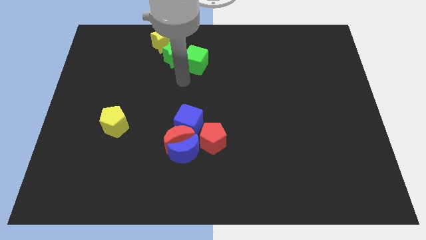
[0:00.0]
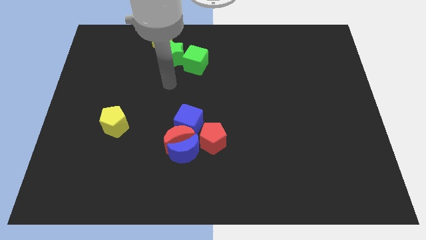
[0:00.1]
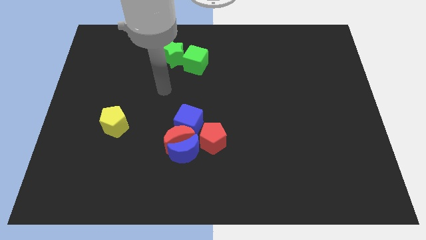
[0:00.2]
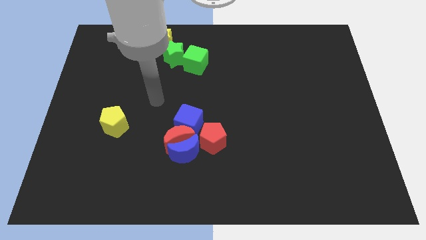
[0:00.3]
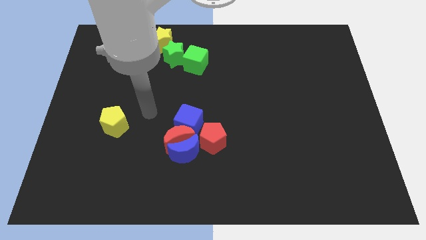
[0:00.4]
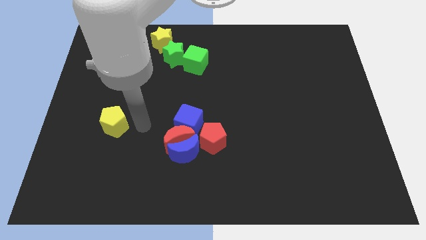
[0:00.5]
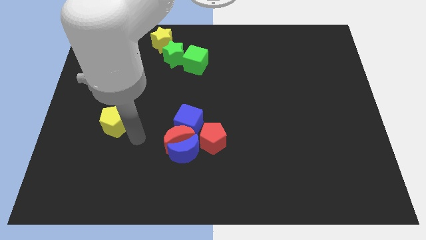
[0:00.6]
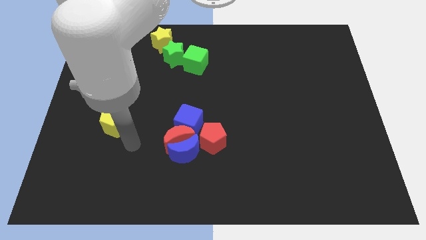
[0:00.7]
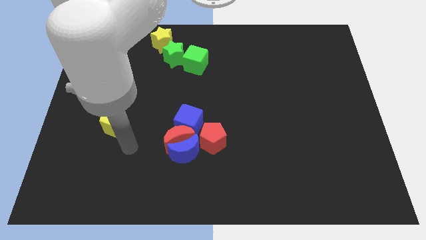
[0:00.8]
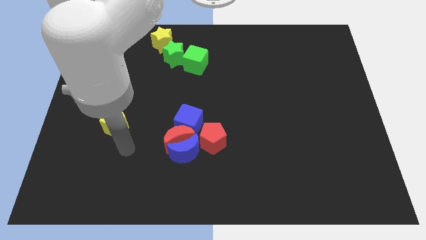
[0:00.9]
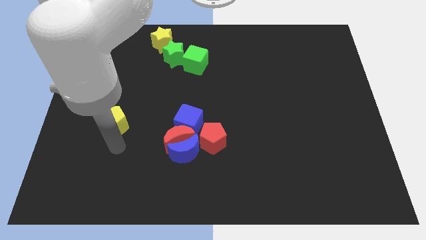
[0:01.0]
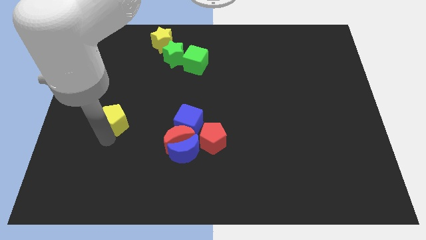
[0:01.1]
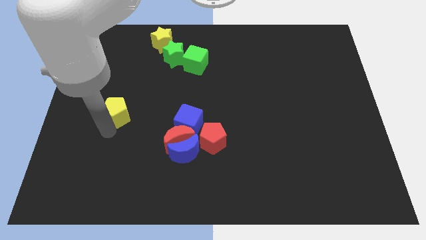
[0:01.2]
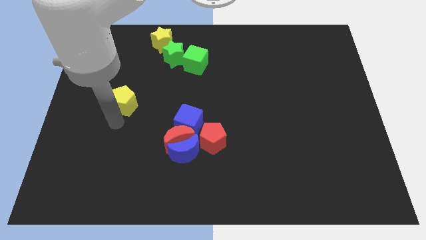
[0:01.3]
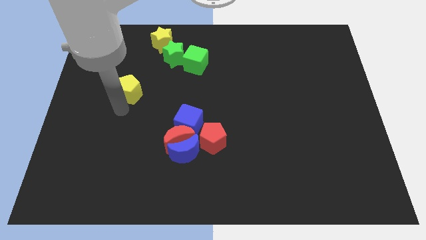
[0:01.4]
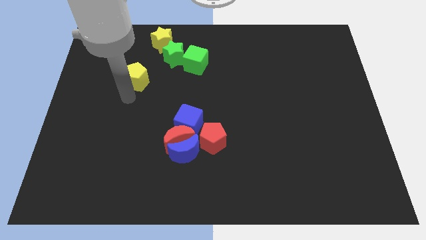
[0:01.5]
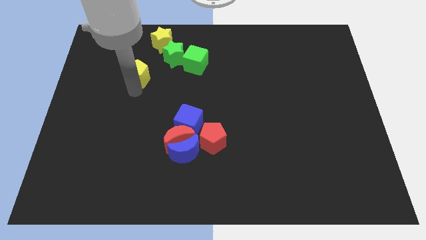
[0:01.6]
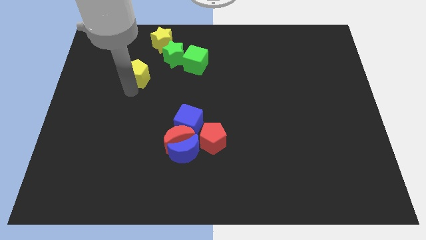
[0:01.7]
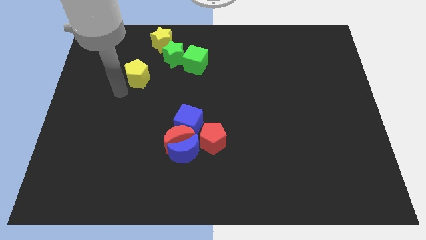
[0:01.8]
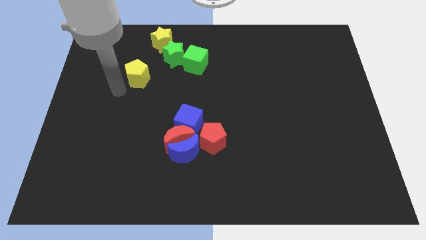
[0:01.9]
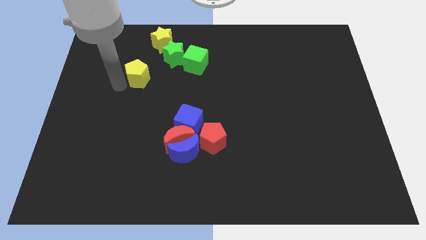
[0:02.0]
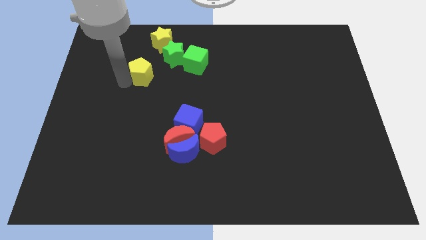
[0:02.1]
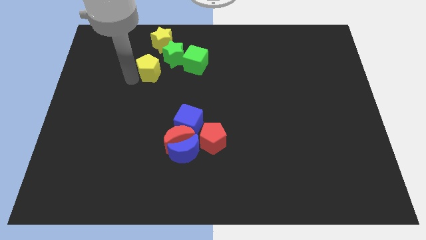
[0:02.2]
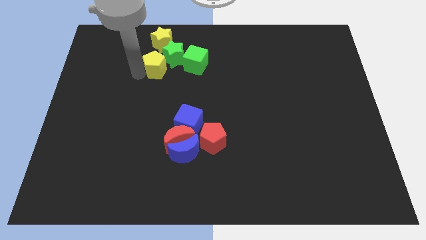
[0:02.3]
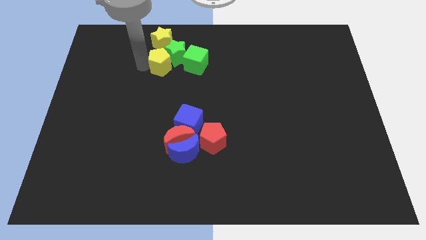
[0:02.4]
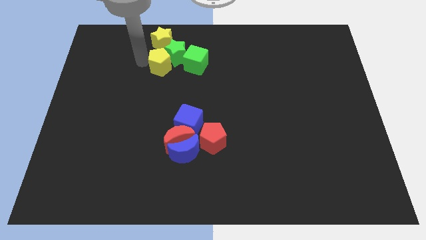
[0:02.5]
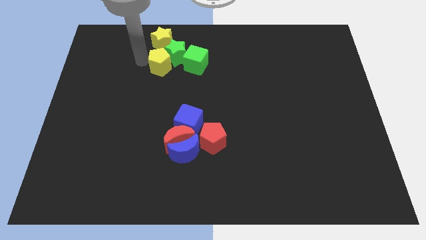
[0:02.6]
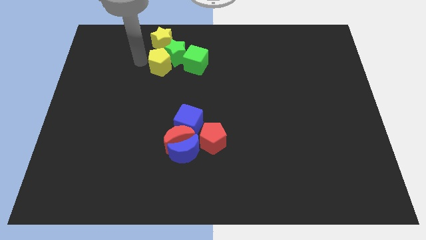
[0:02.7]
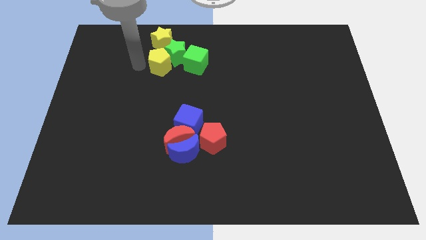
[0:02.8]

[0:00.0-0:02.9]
move the yellow pentagon up towards the group of blocks

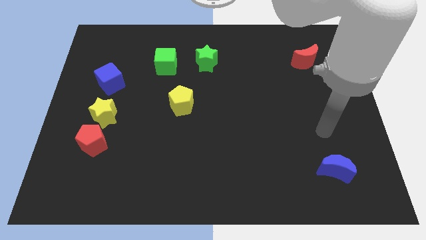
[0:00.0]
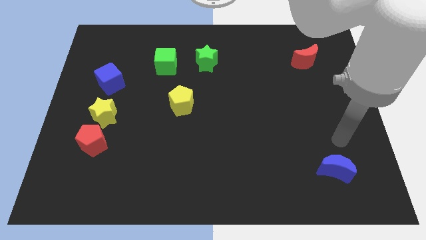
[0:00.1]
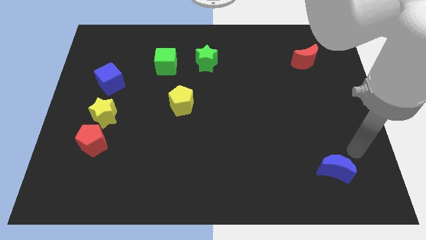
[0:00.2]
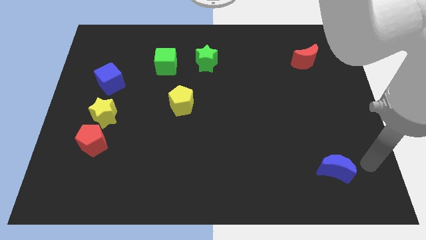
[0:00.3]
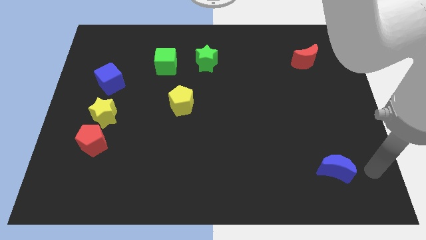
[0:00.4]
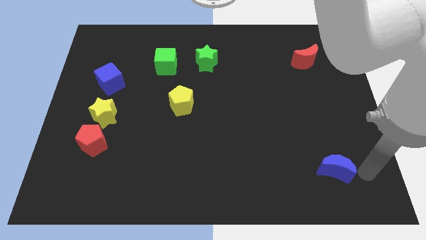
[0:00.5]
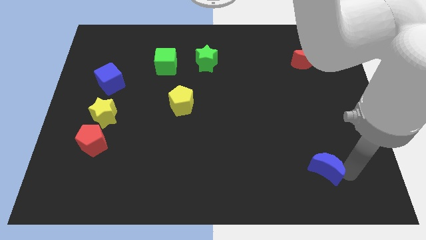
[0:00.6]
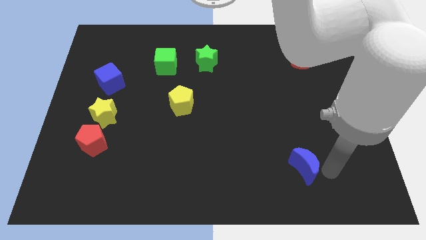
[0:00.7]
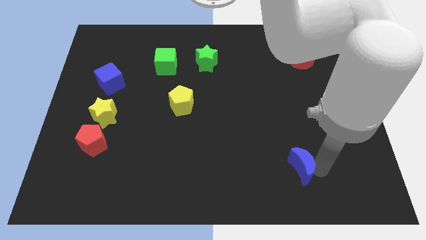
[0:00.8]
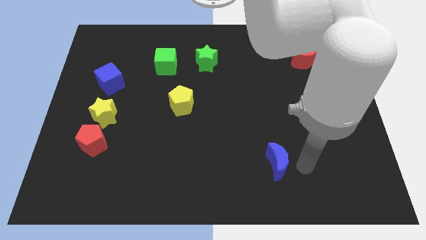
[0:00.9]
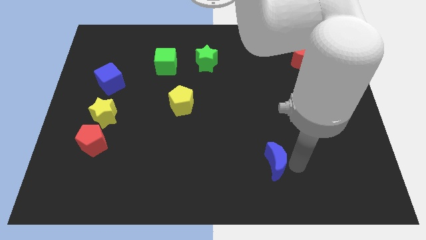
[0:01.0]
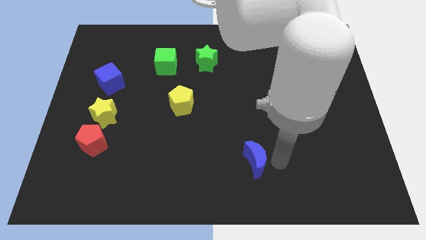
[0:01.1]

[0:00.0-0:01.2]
slightly push the blue moon towards the left

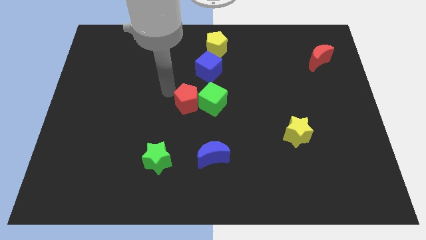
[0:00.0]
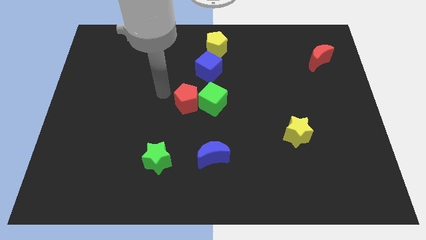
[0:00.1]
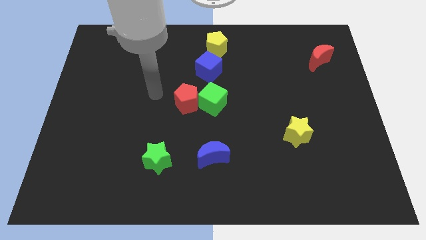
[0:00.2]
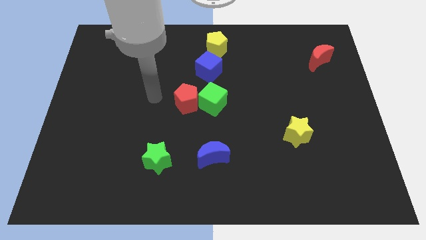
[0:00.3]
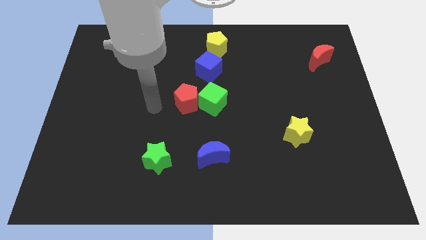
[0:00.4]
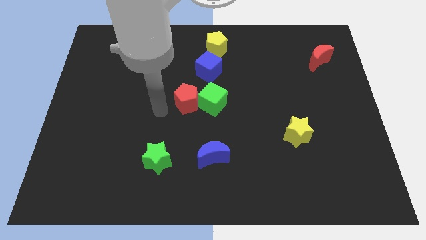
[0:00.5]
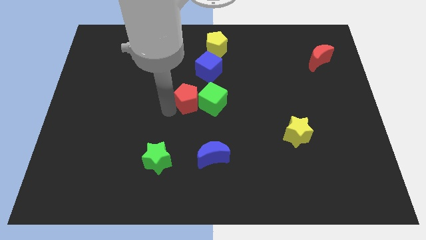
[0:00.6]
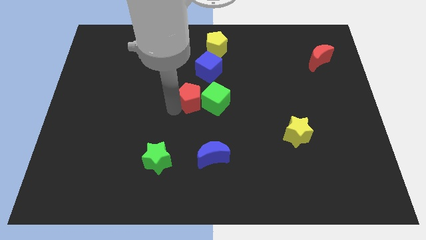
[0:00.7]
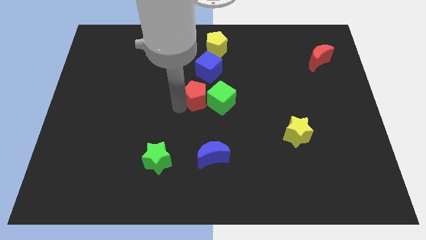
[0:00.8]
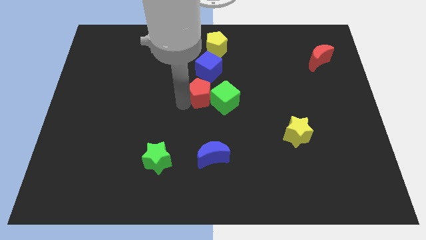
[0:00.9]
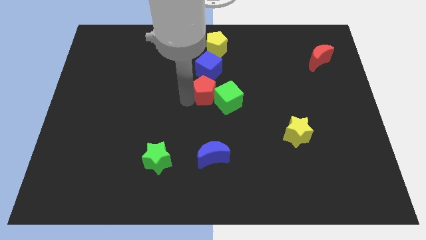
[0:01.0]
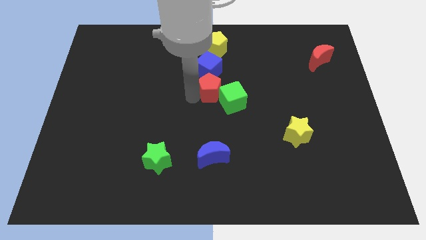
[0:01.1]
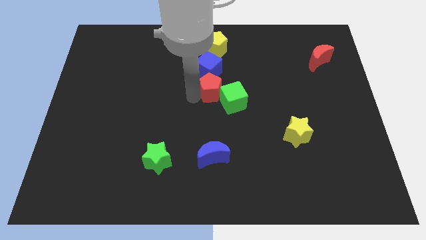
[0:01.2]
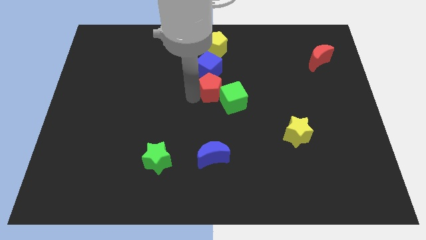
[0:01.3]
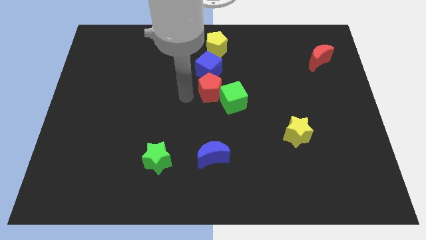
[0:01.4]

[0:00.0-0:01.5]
place the red pentagon under the blue cube

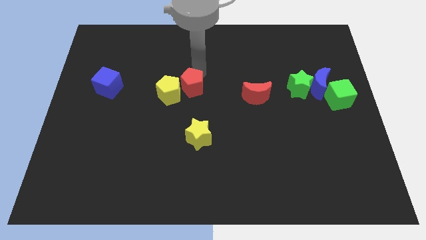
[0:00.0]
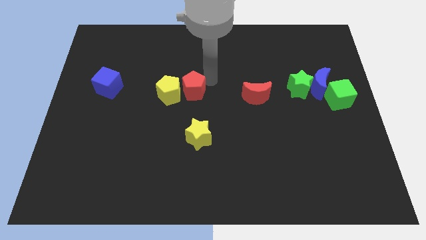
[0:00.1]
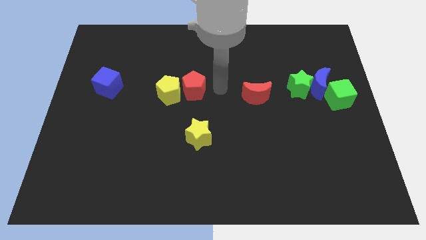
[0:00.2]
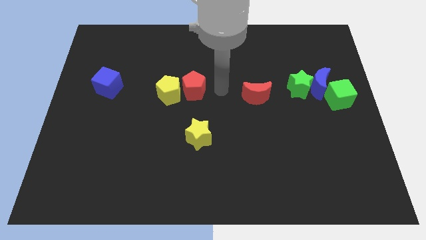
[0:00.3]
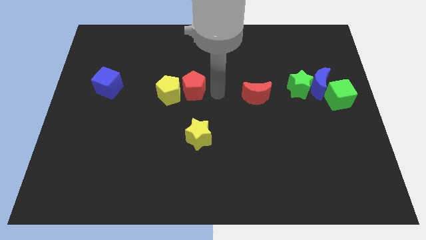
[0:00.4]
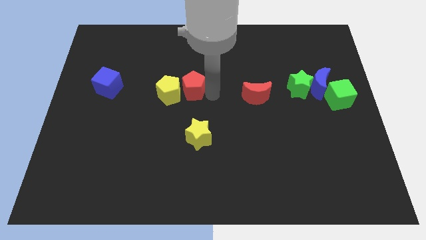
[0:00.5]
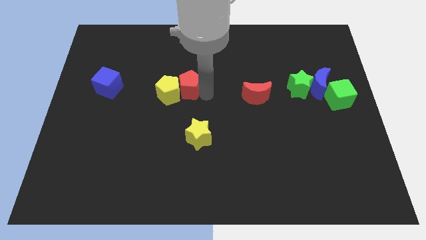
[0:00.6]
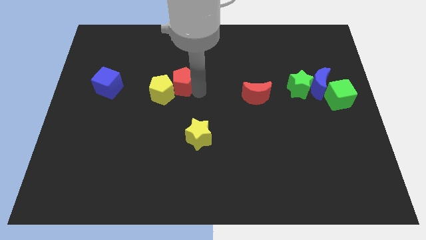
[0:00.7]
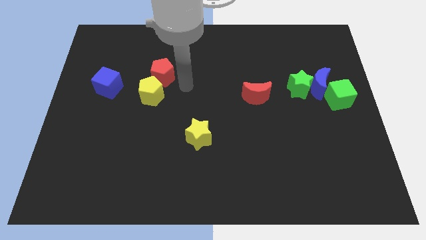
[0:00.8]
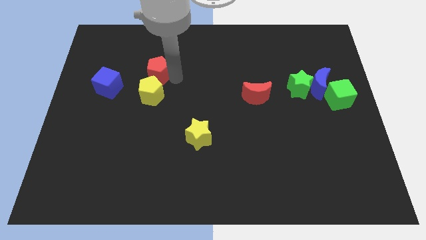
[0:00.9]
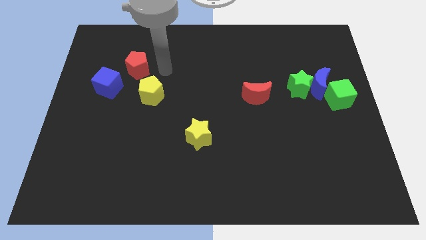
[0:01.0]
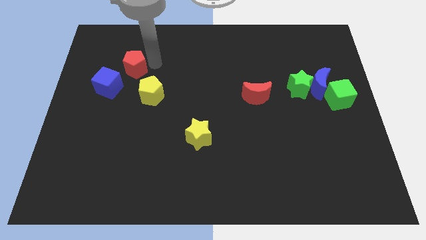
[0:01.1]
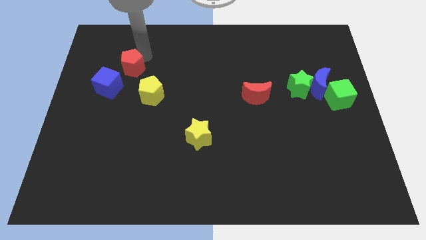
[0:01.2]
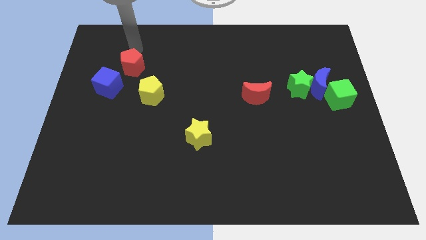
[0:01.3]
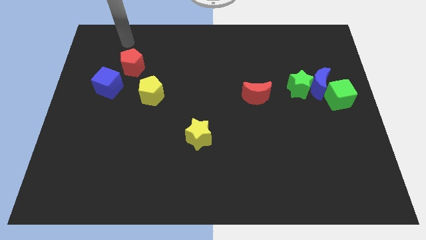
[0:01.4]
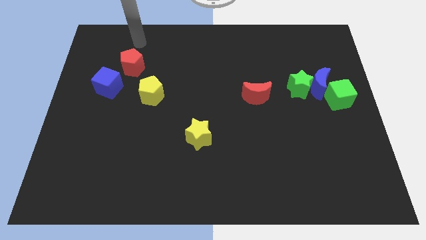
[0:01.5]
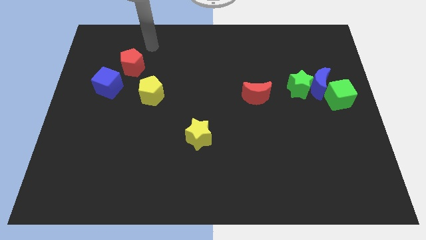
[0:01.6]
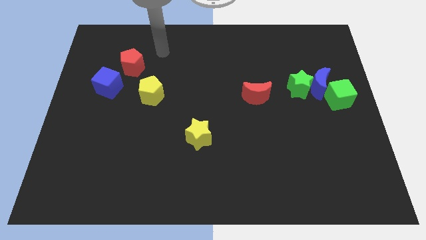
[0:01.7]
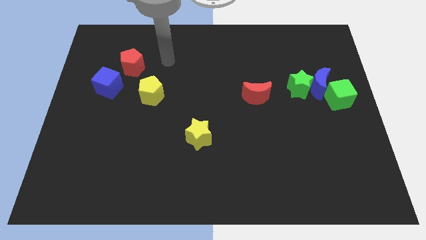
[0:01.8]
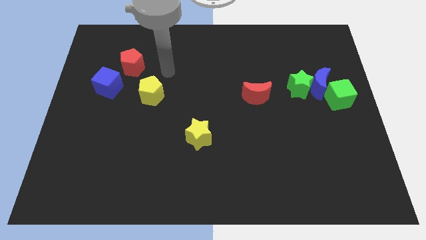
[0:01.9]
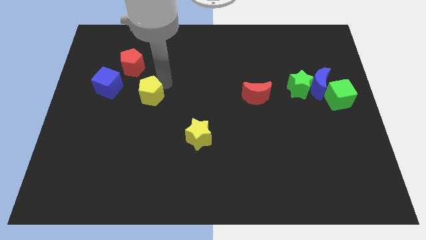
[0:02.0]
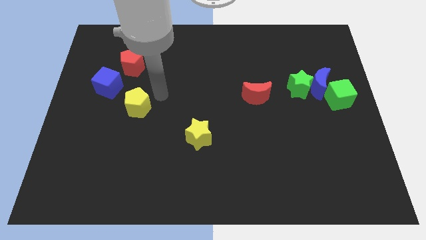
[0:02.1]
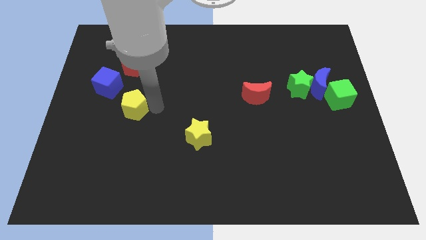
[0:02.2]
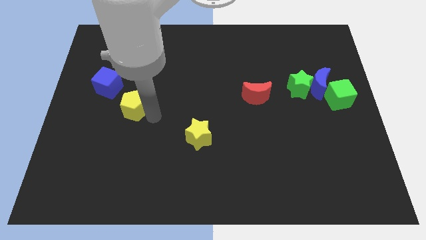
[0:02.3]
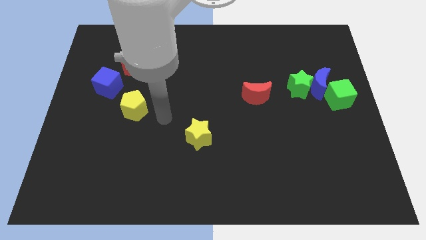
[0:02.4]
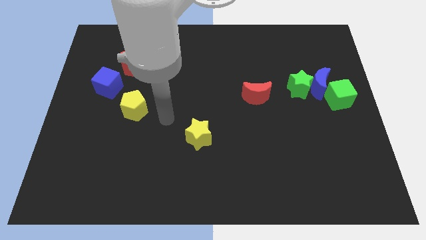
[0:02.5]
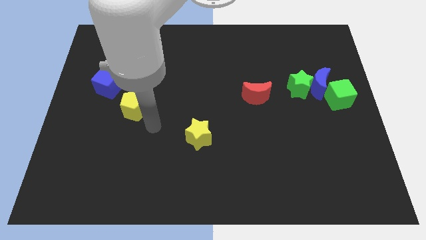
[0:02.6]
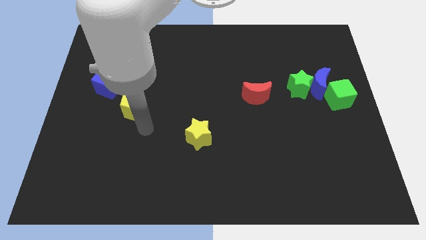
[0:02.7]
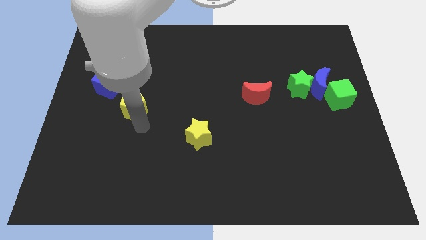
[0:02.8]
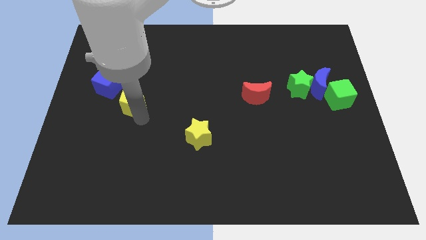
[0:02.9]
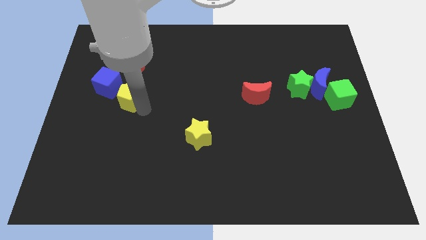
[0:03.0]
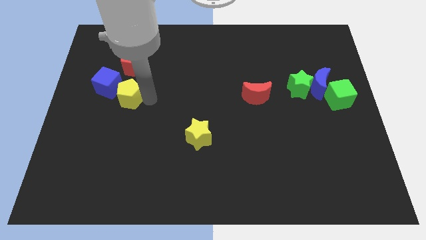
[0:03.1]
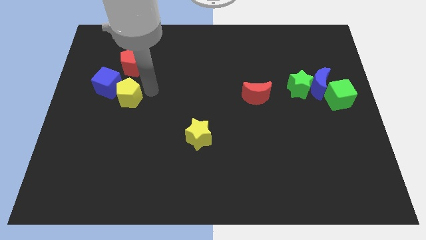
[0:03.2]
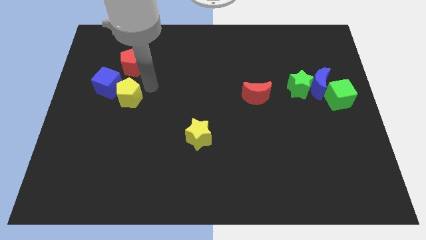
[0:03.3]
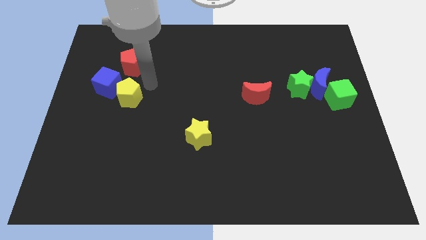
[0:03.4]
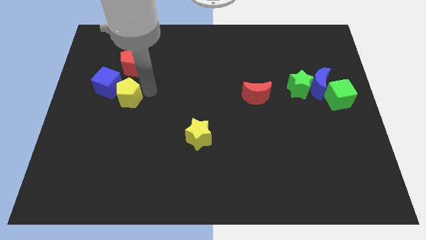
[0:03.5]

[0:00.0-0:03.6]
move red pentagon and yellow pentagon towards blue cube
